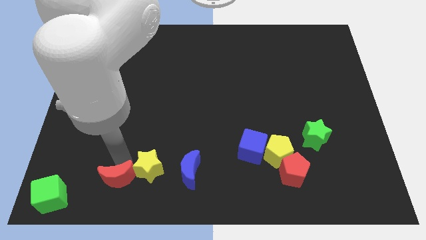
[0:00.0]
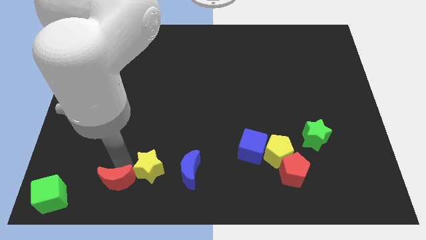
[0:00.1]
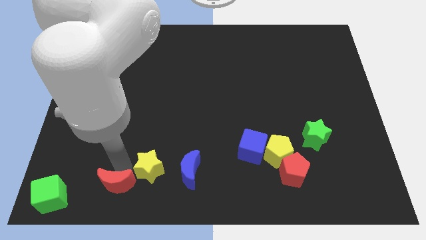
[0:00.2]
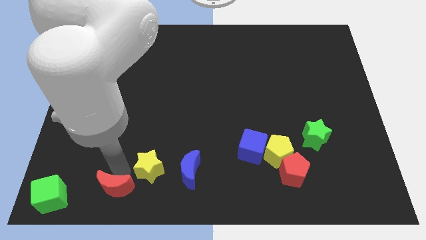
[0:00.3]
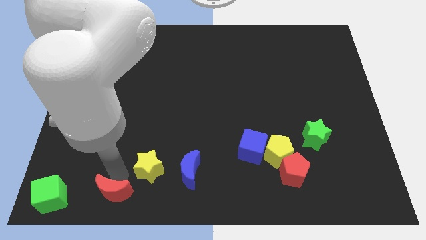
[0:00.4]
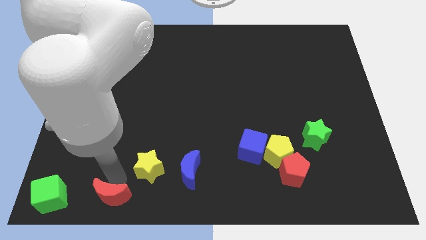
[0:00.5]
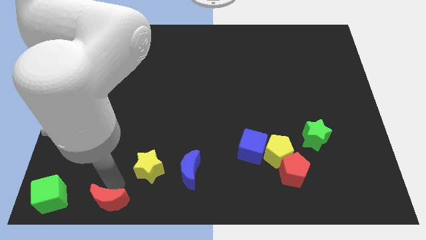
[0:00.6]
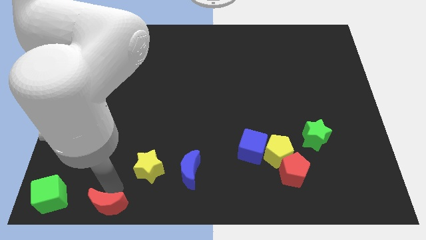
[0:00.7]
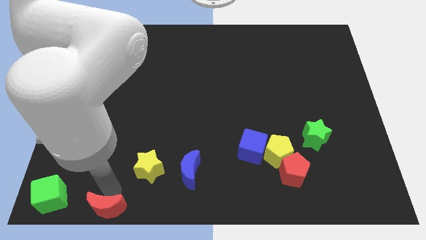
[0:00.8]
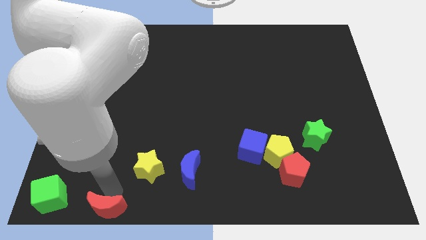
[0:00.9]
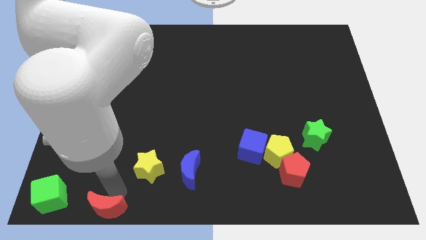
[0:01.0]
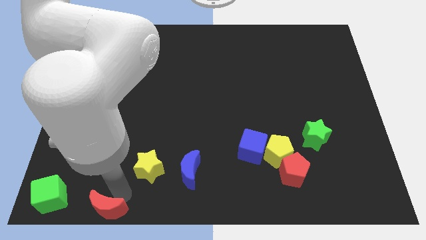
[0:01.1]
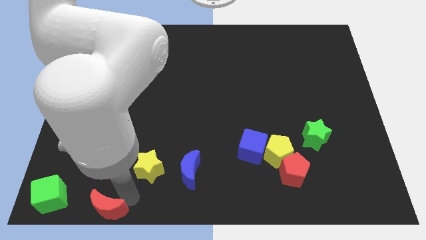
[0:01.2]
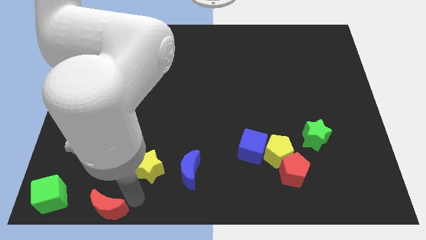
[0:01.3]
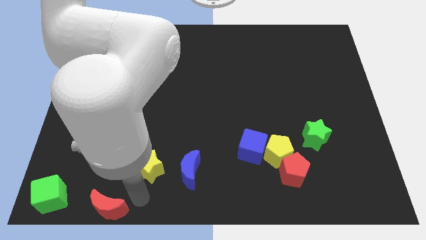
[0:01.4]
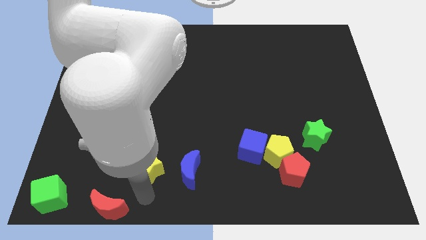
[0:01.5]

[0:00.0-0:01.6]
move the arm away from red crescent

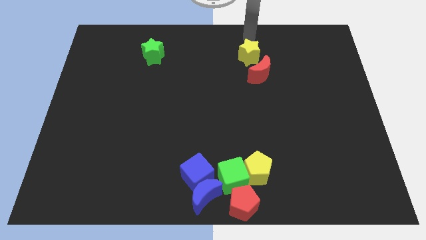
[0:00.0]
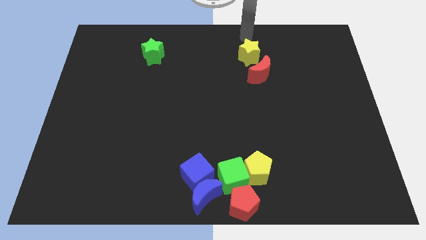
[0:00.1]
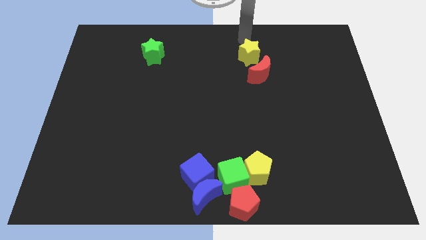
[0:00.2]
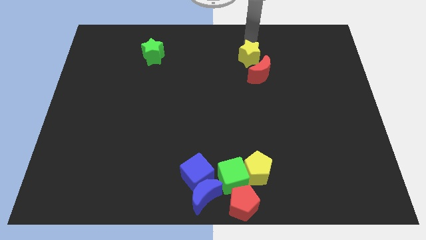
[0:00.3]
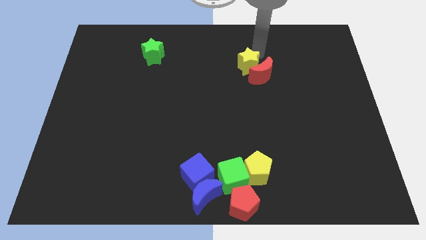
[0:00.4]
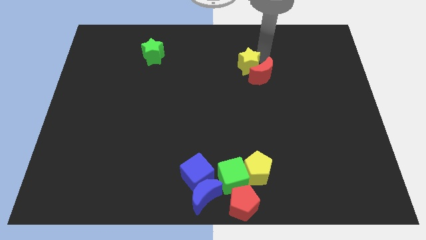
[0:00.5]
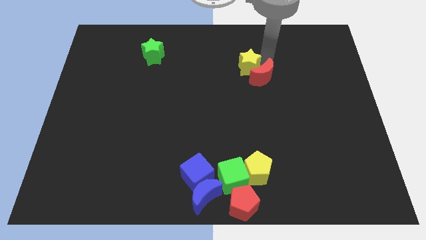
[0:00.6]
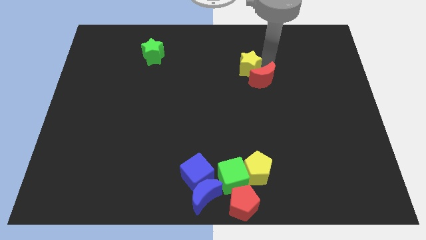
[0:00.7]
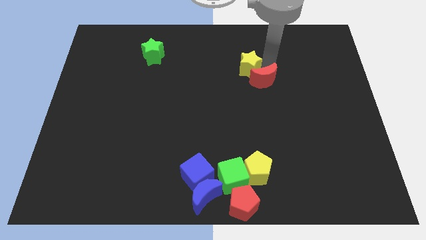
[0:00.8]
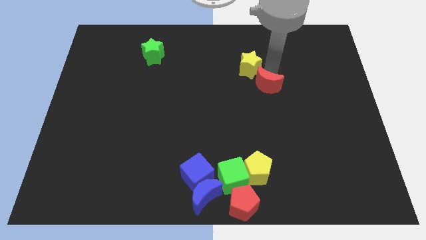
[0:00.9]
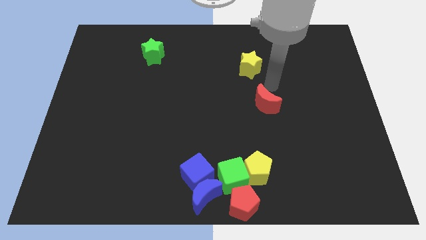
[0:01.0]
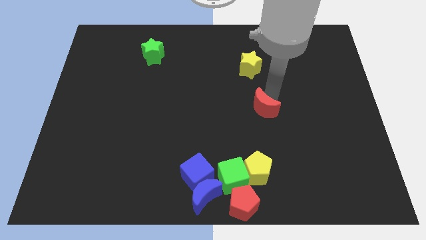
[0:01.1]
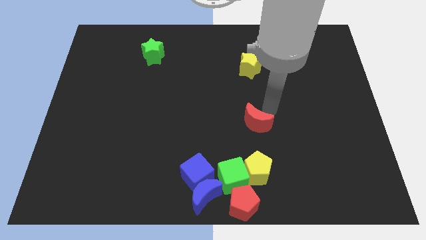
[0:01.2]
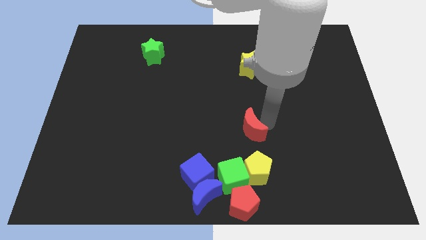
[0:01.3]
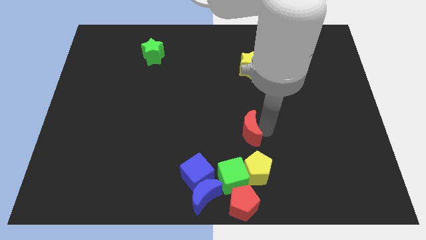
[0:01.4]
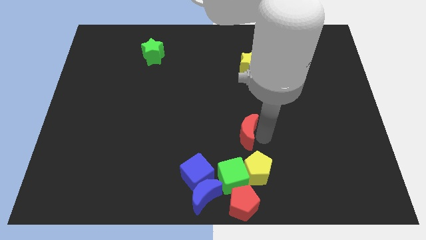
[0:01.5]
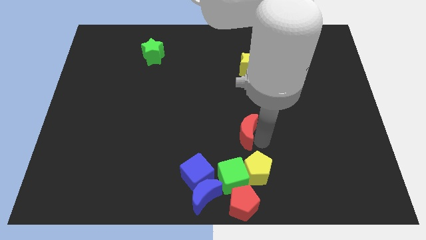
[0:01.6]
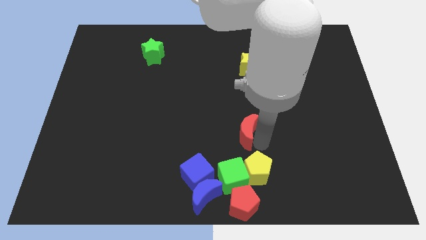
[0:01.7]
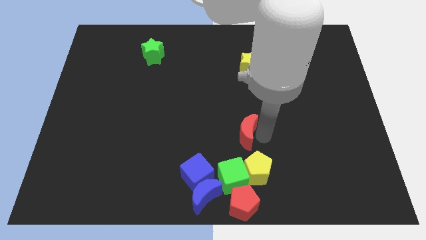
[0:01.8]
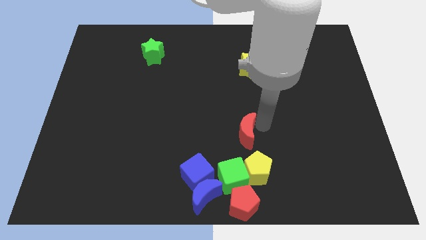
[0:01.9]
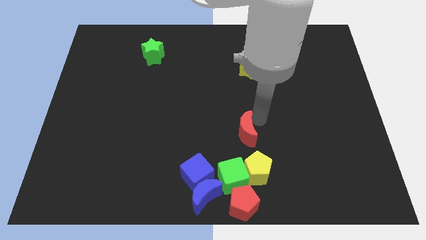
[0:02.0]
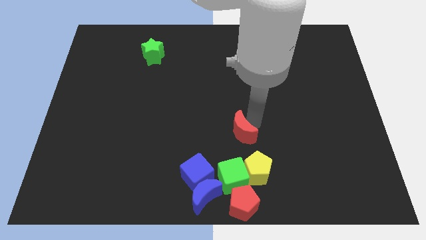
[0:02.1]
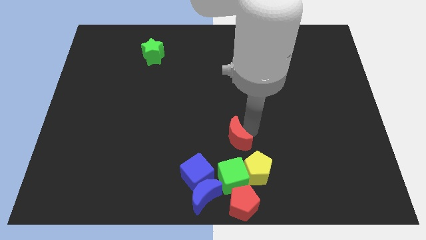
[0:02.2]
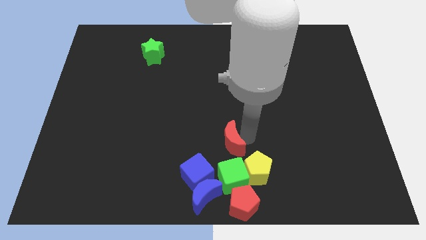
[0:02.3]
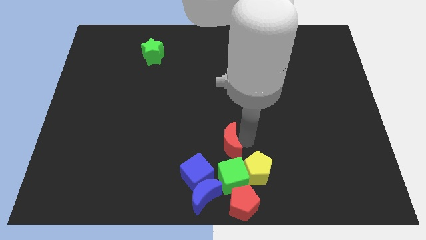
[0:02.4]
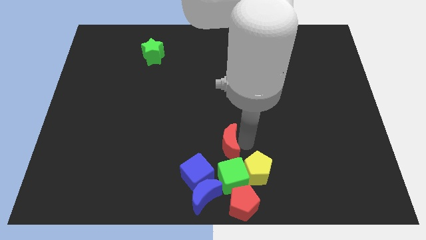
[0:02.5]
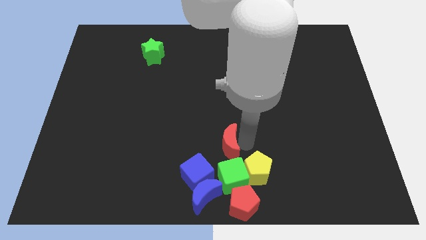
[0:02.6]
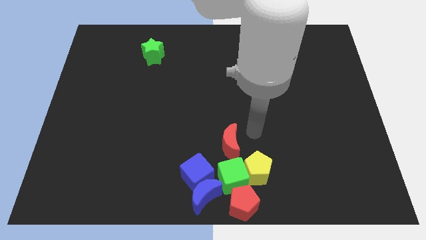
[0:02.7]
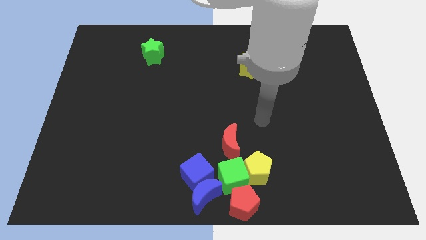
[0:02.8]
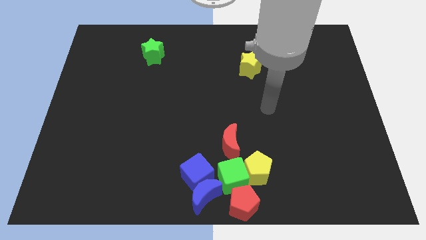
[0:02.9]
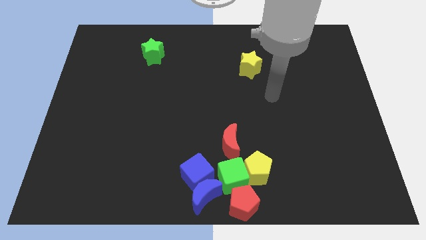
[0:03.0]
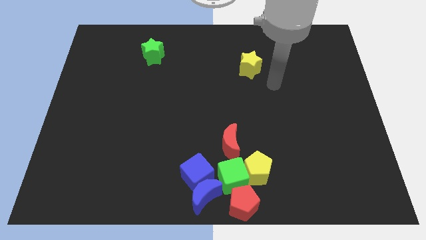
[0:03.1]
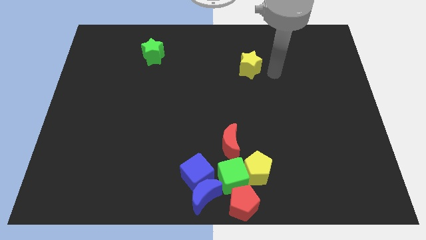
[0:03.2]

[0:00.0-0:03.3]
move the red crescent towards the top of the green cube

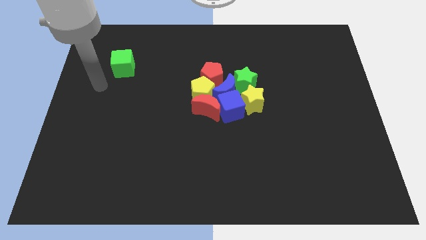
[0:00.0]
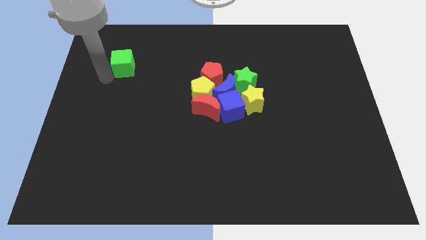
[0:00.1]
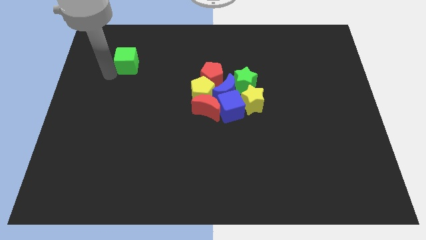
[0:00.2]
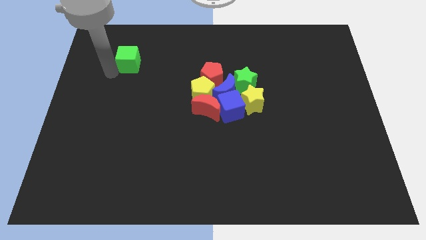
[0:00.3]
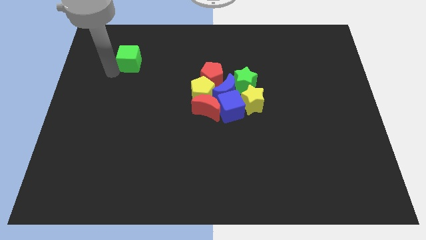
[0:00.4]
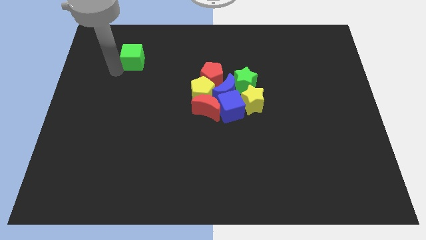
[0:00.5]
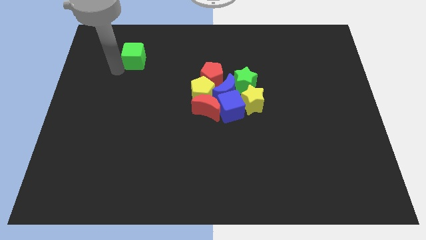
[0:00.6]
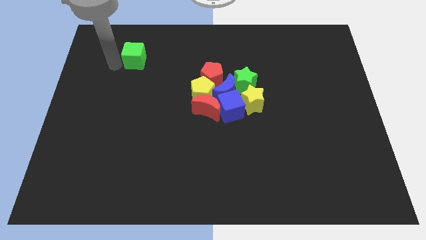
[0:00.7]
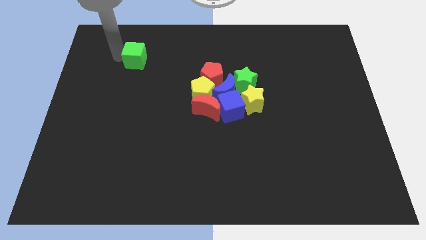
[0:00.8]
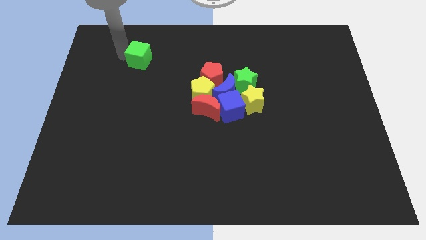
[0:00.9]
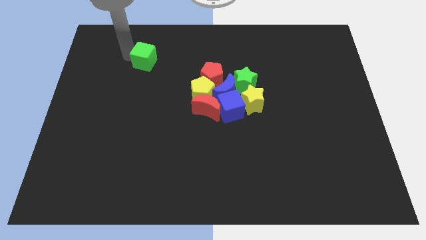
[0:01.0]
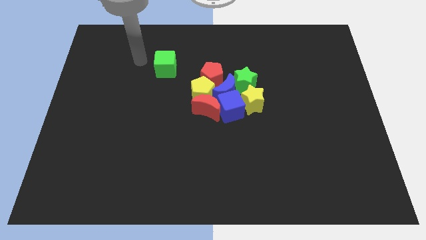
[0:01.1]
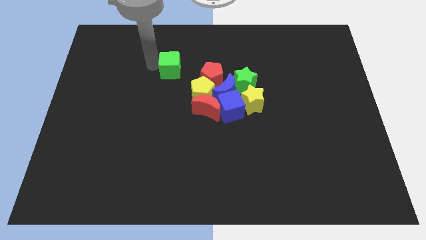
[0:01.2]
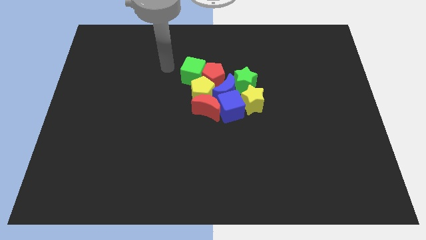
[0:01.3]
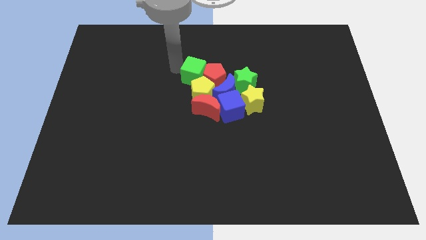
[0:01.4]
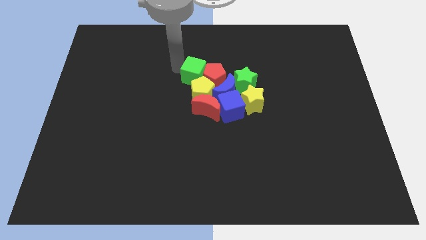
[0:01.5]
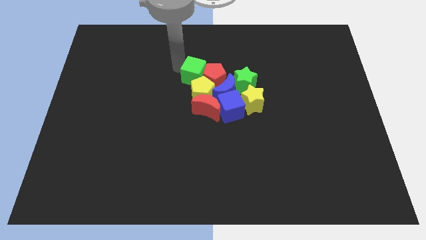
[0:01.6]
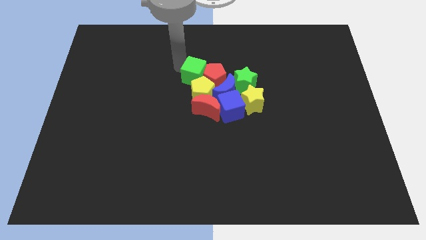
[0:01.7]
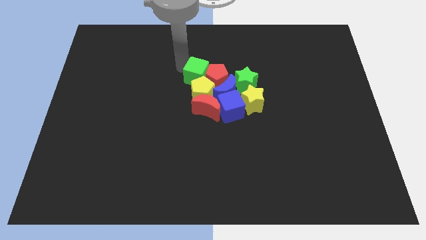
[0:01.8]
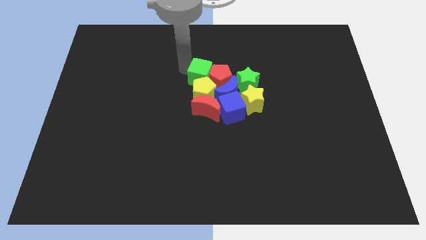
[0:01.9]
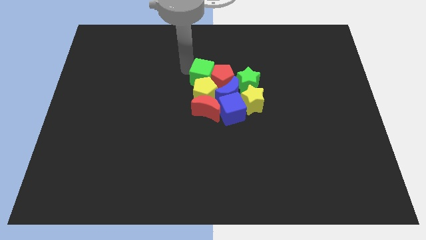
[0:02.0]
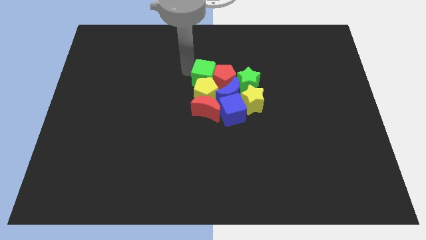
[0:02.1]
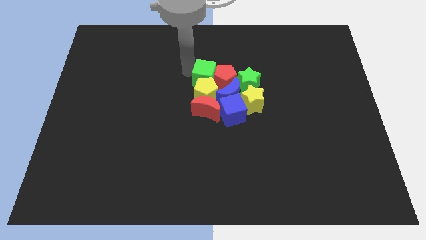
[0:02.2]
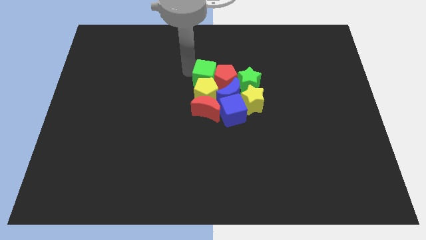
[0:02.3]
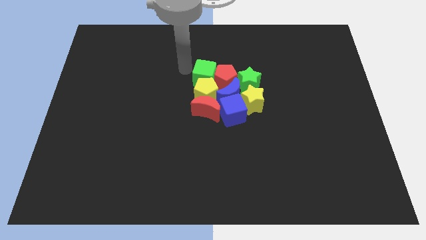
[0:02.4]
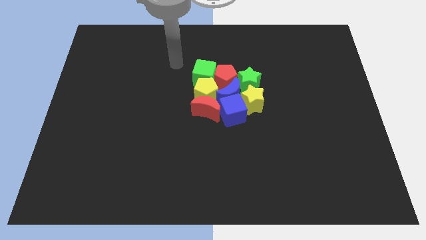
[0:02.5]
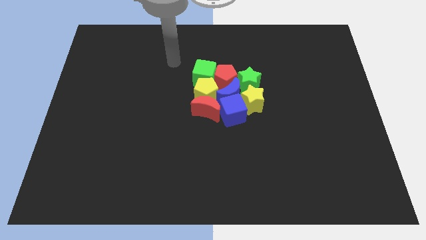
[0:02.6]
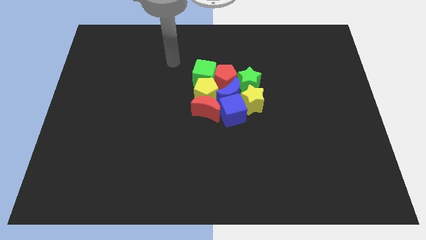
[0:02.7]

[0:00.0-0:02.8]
place the green cube above the yellow pentagon

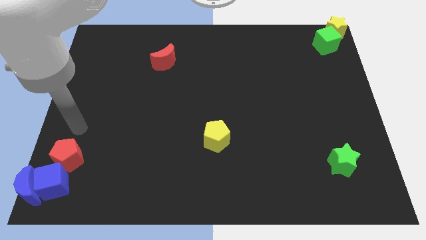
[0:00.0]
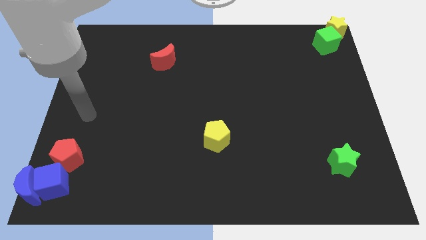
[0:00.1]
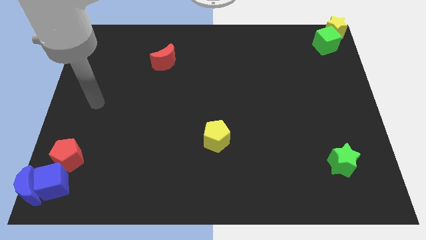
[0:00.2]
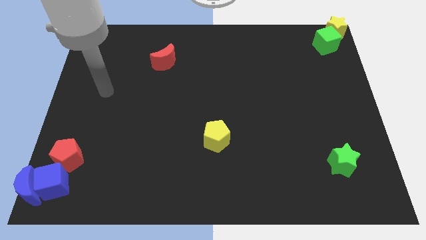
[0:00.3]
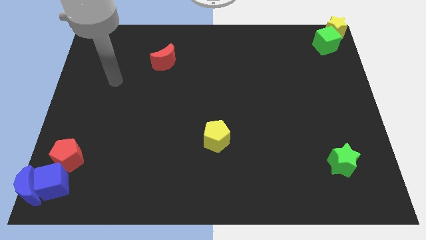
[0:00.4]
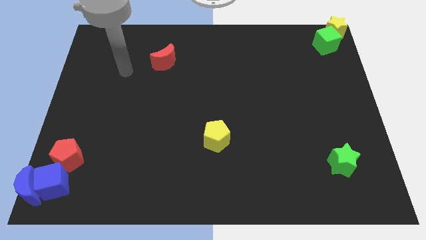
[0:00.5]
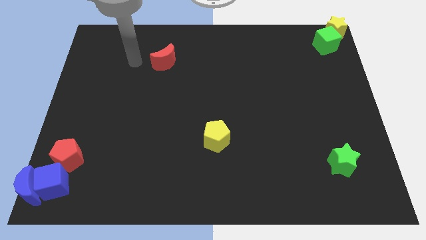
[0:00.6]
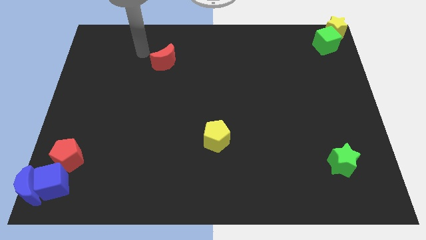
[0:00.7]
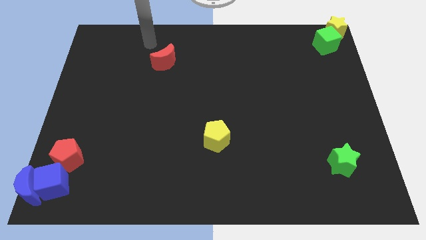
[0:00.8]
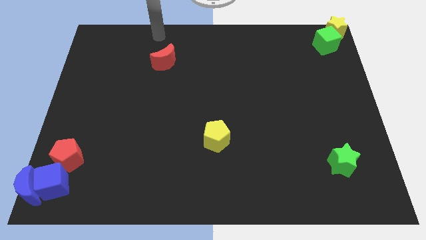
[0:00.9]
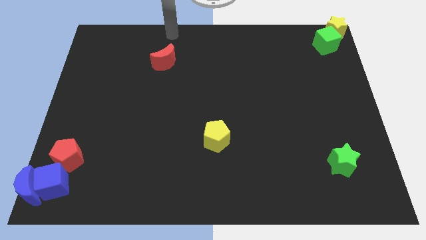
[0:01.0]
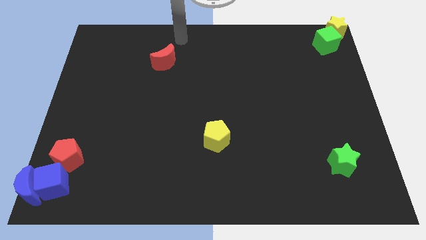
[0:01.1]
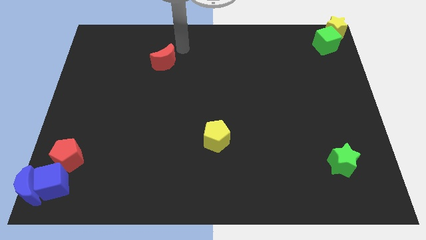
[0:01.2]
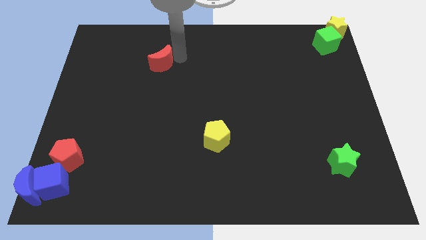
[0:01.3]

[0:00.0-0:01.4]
point your arm at the top right side of the red crescent
